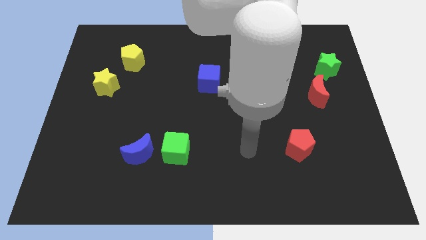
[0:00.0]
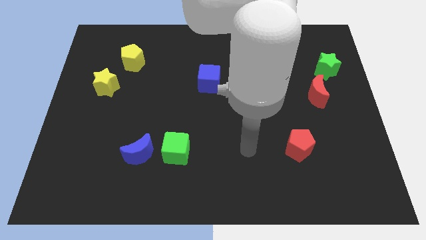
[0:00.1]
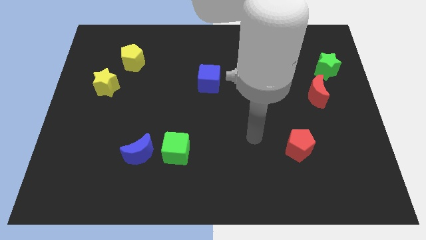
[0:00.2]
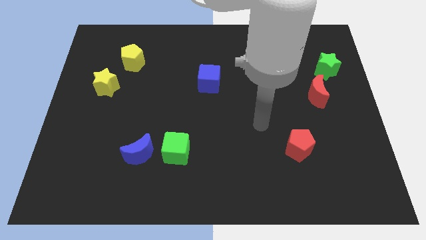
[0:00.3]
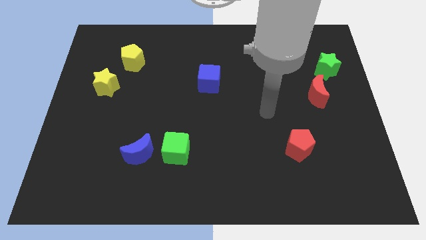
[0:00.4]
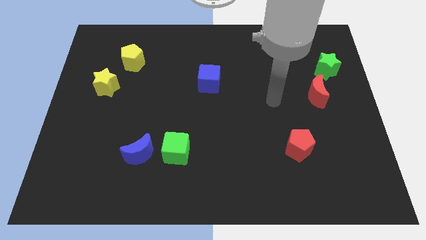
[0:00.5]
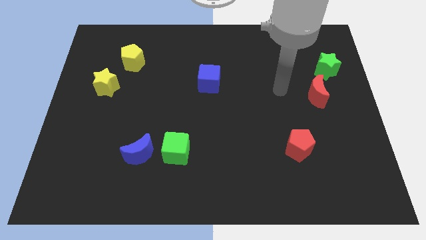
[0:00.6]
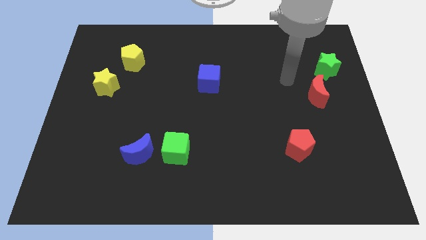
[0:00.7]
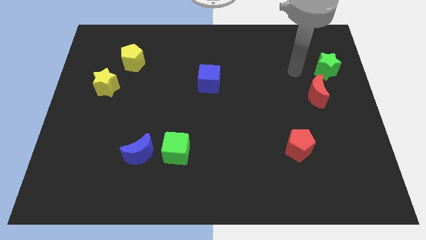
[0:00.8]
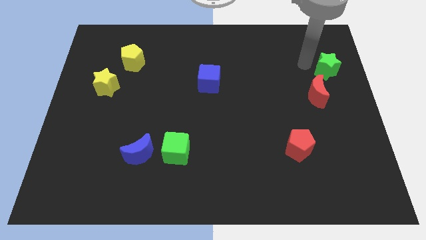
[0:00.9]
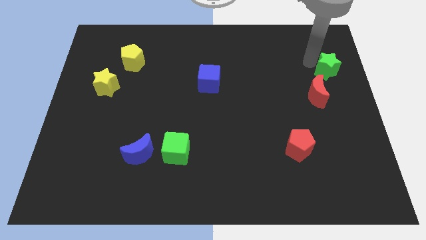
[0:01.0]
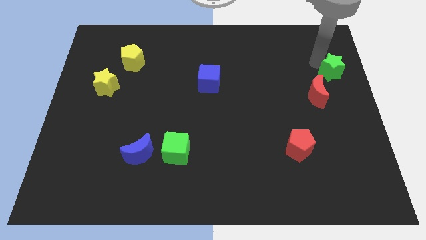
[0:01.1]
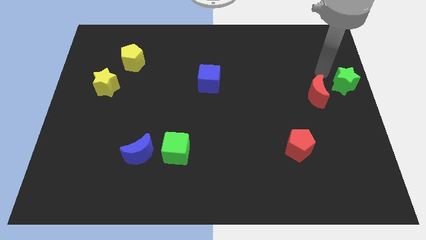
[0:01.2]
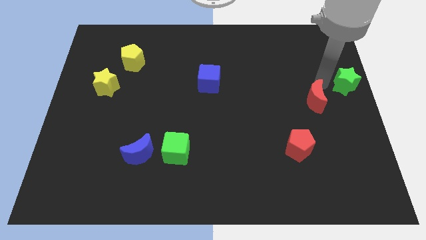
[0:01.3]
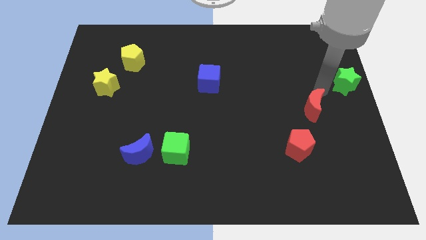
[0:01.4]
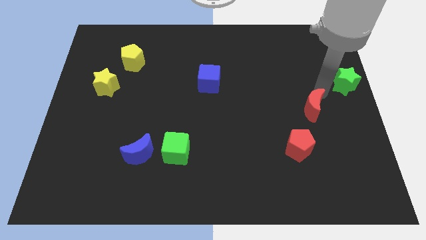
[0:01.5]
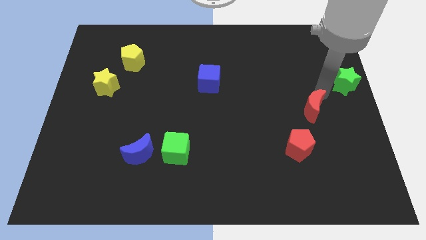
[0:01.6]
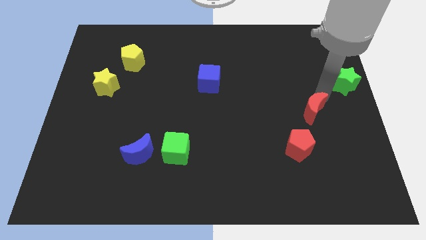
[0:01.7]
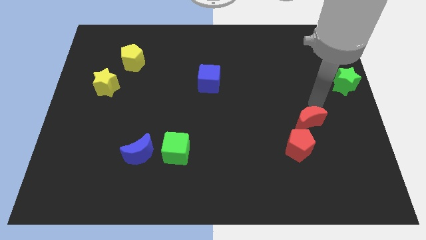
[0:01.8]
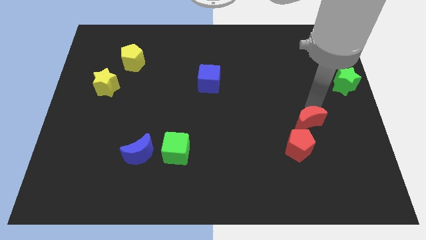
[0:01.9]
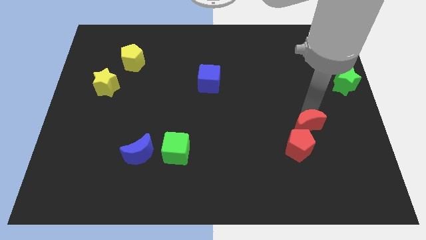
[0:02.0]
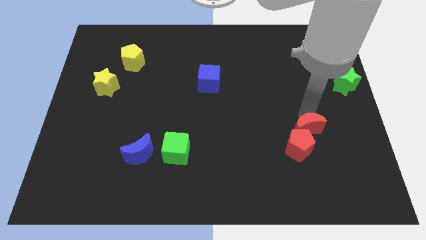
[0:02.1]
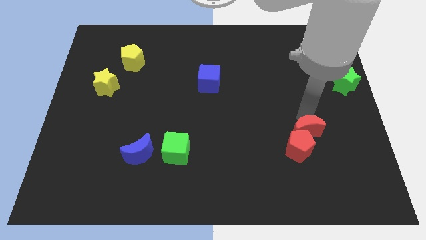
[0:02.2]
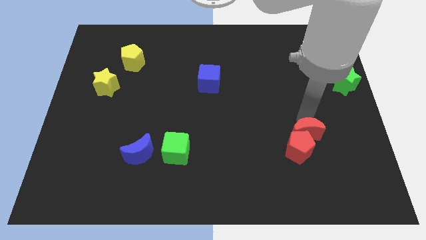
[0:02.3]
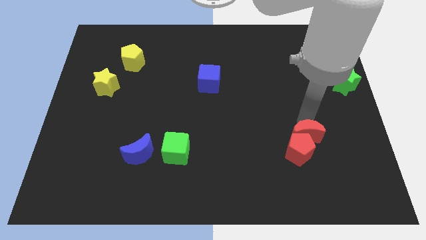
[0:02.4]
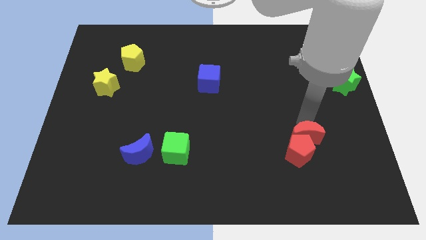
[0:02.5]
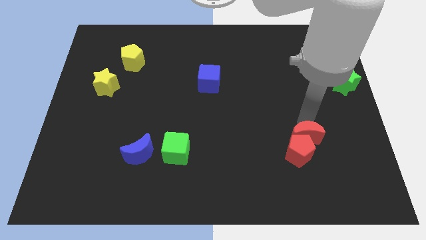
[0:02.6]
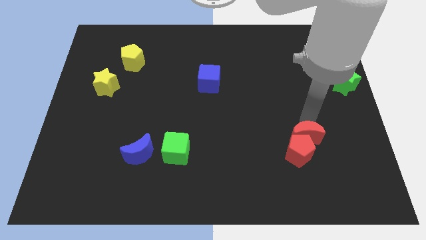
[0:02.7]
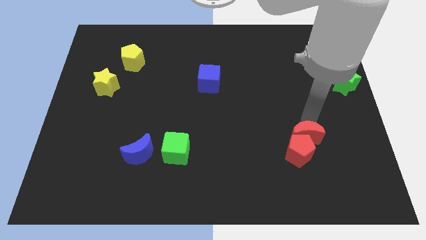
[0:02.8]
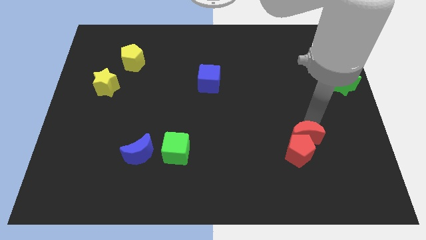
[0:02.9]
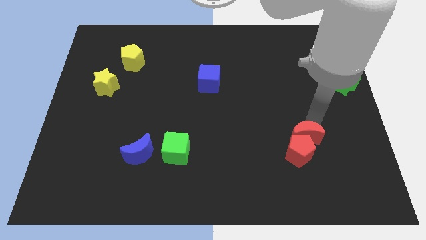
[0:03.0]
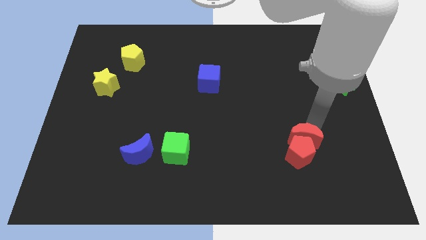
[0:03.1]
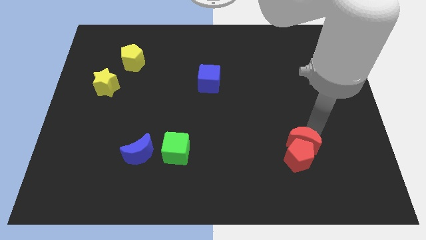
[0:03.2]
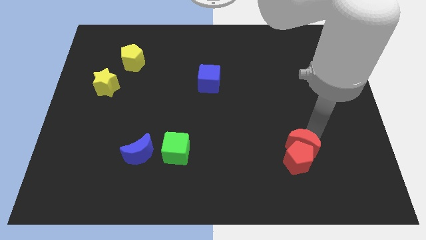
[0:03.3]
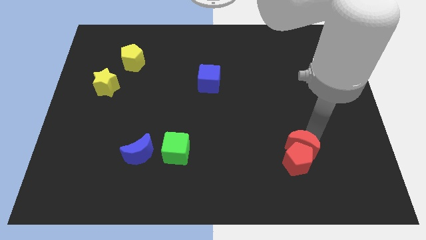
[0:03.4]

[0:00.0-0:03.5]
push the red moon into the red pentagon

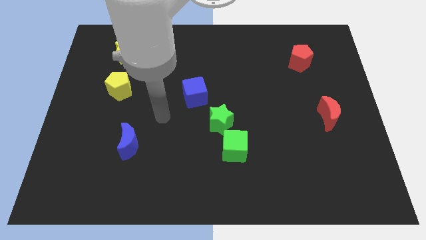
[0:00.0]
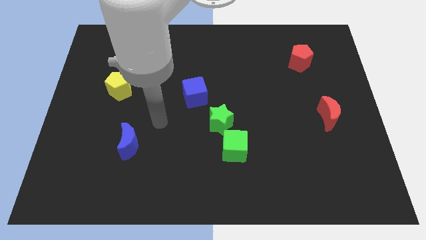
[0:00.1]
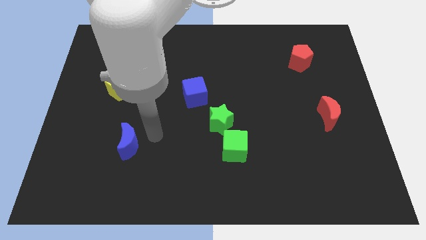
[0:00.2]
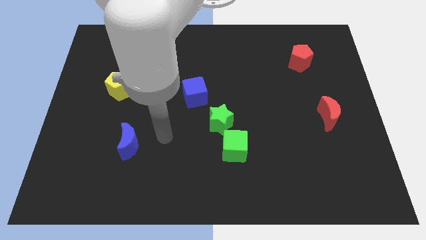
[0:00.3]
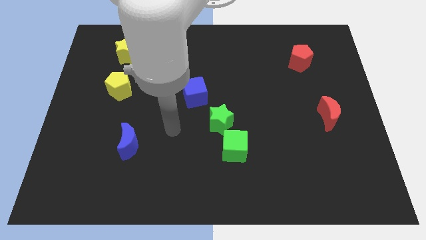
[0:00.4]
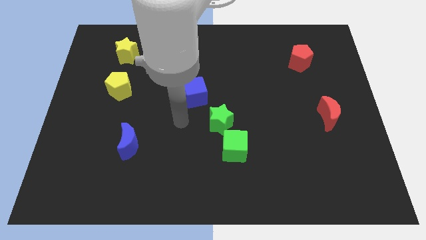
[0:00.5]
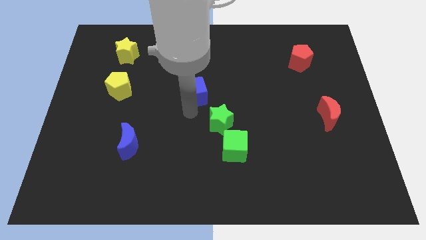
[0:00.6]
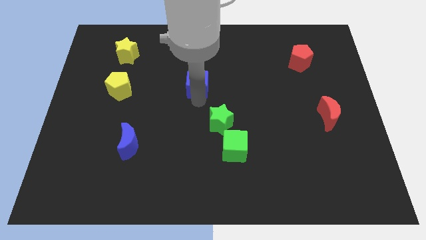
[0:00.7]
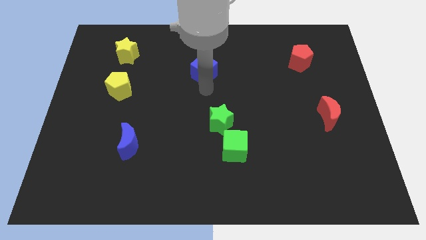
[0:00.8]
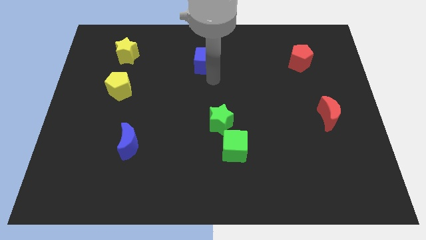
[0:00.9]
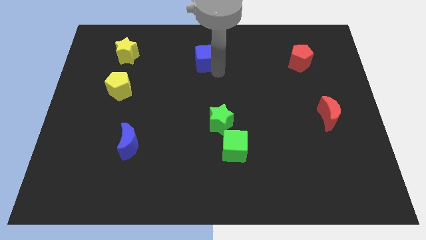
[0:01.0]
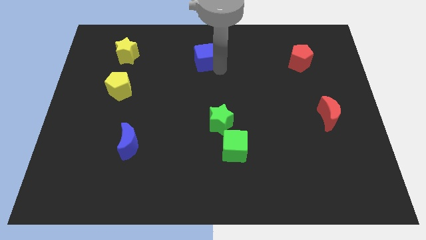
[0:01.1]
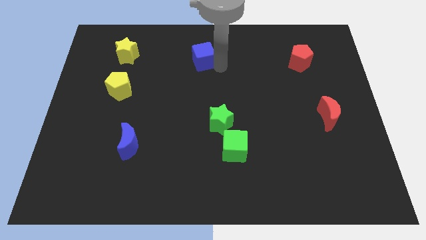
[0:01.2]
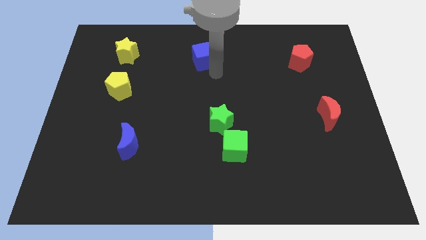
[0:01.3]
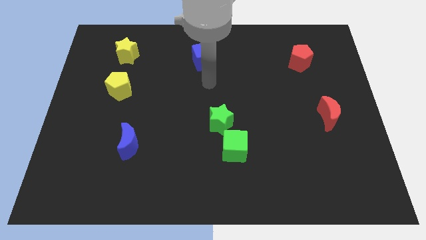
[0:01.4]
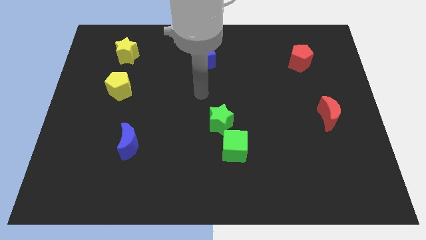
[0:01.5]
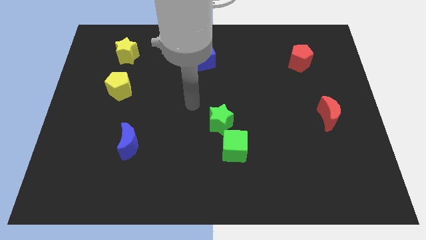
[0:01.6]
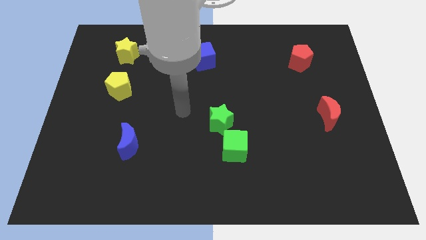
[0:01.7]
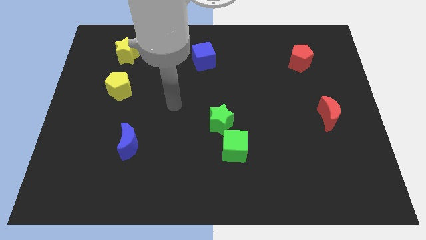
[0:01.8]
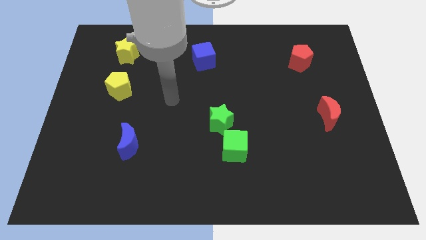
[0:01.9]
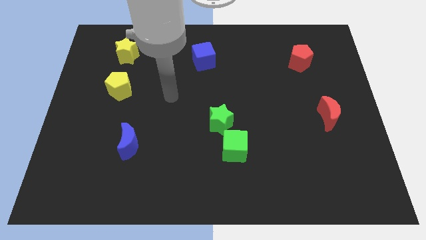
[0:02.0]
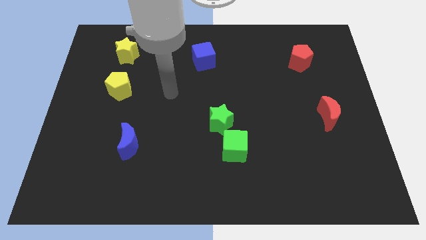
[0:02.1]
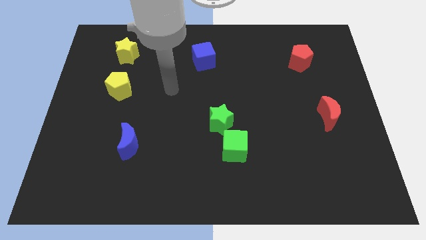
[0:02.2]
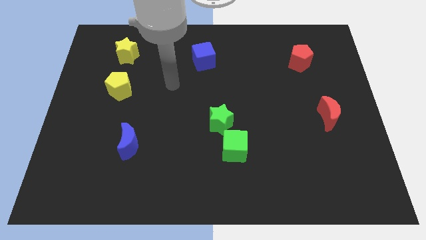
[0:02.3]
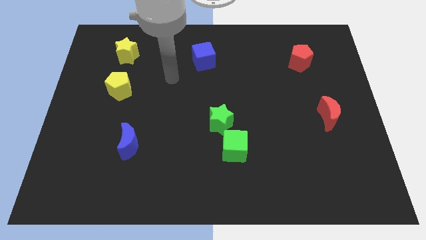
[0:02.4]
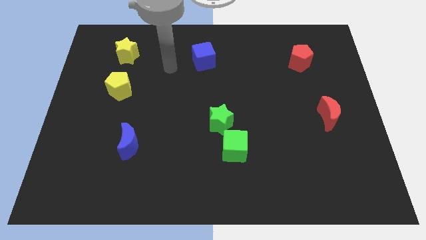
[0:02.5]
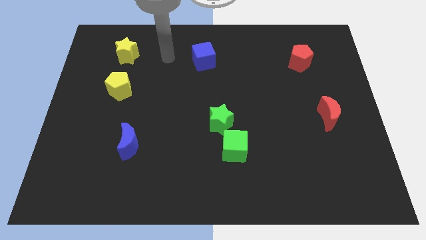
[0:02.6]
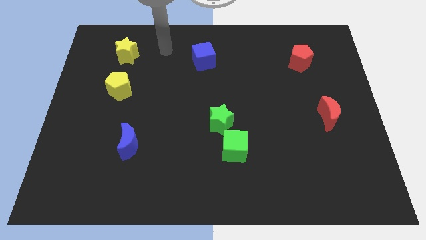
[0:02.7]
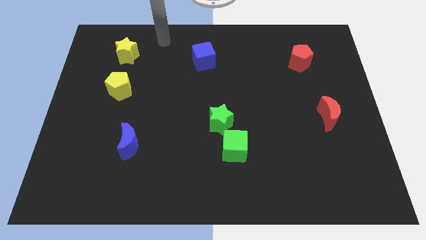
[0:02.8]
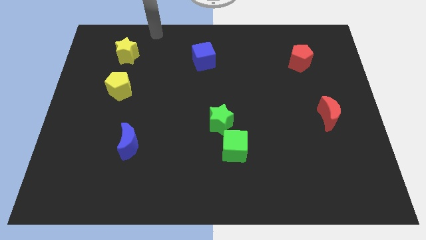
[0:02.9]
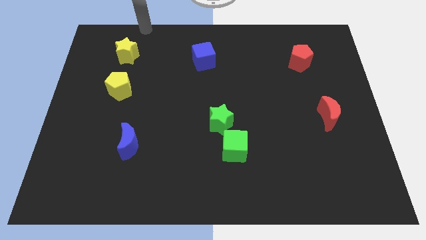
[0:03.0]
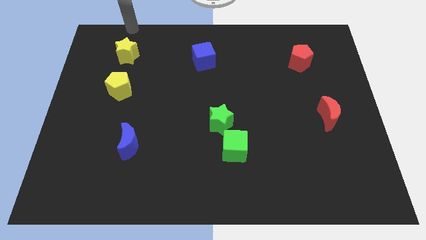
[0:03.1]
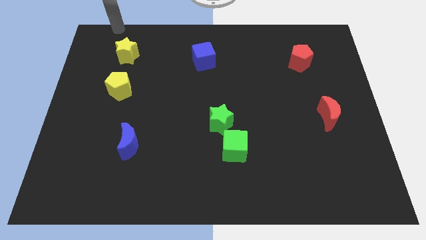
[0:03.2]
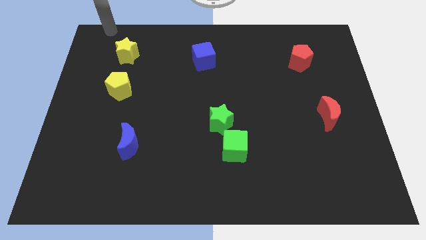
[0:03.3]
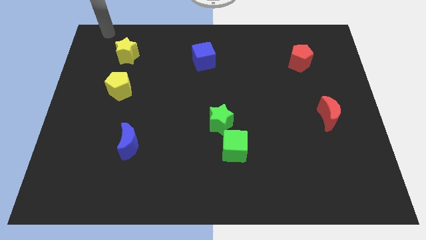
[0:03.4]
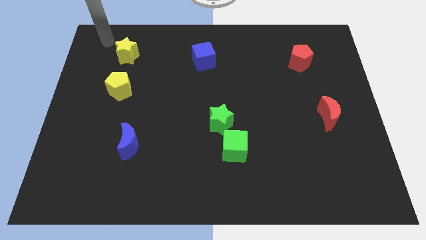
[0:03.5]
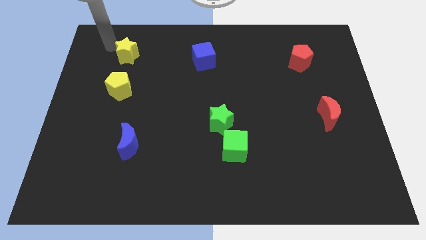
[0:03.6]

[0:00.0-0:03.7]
put the blue cube to the right of the yellow star

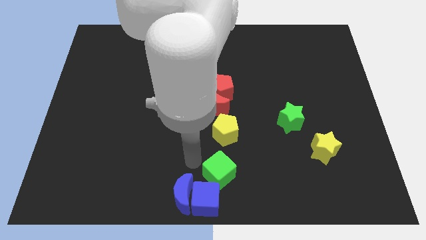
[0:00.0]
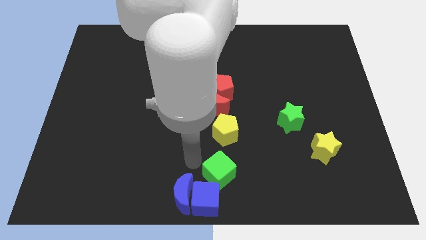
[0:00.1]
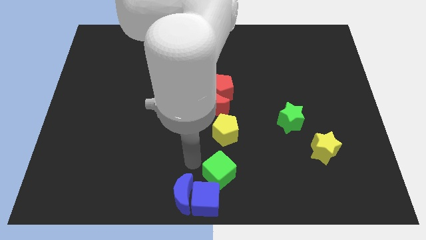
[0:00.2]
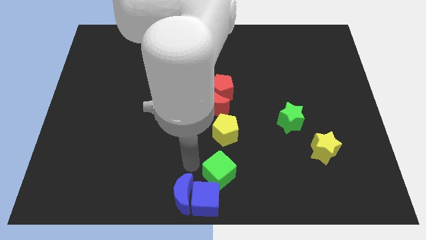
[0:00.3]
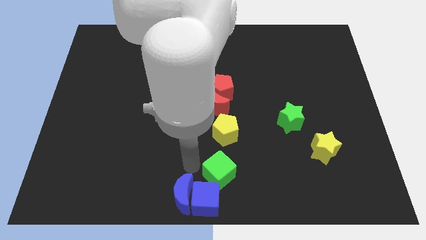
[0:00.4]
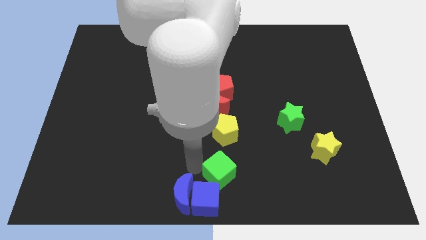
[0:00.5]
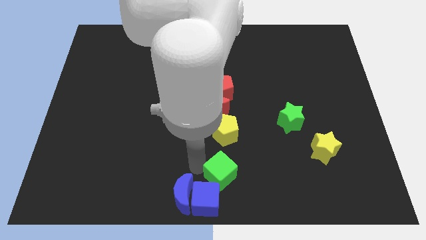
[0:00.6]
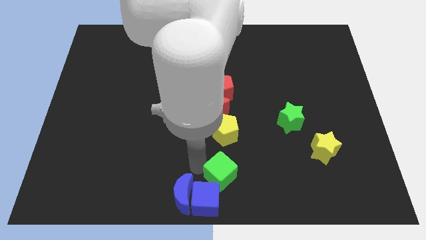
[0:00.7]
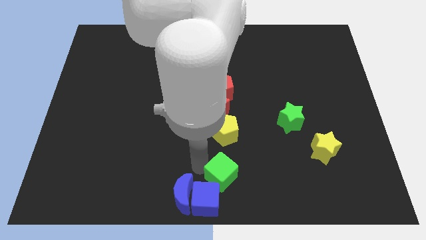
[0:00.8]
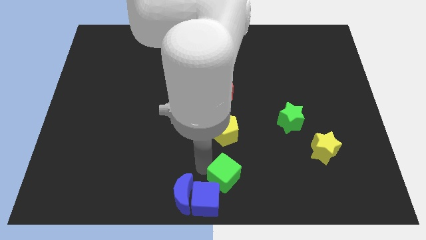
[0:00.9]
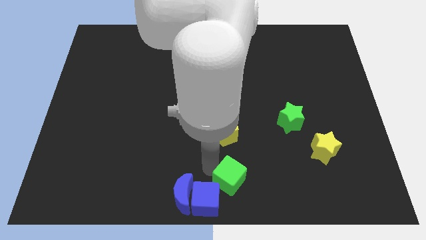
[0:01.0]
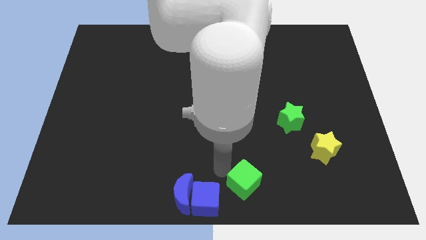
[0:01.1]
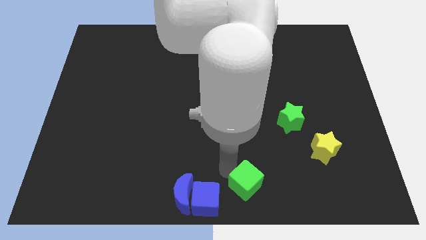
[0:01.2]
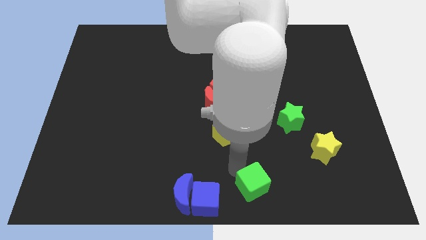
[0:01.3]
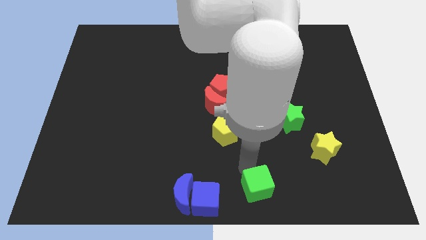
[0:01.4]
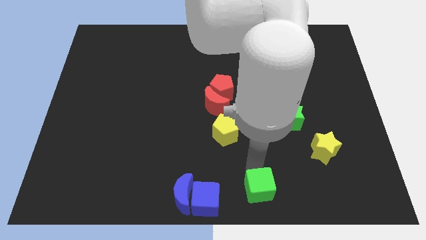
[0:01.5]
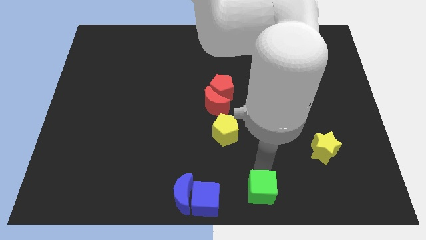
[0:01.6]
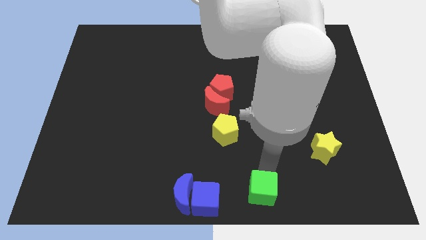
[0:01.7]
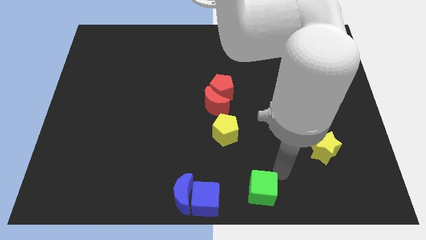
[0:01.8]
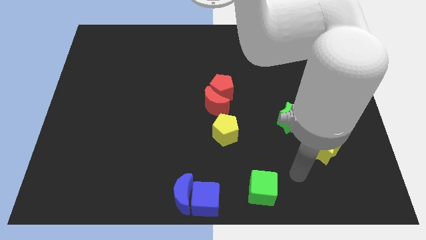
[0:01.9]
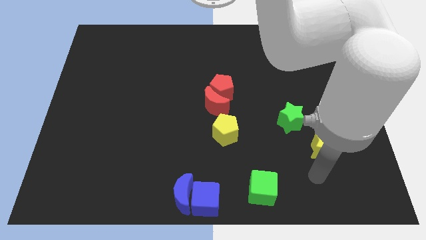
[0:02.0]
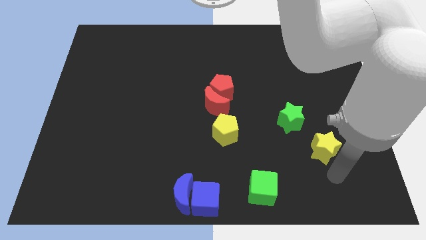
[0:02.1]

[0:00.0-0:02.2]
move the green cube to the right of the blue cube
